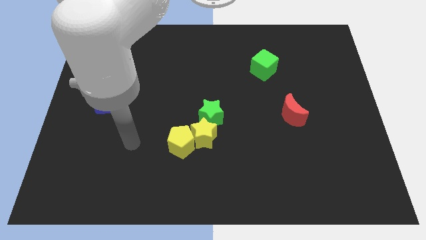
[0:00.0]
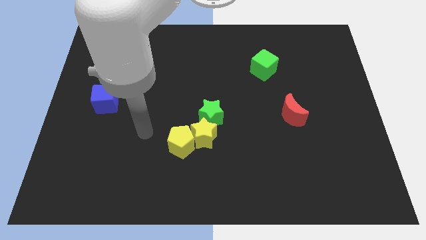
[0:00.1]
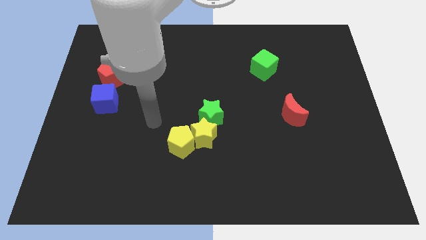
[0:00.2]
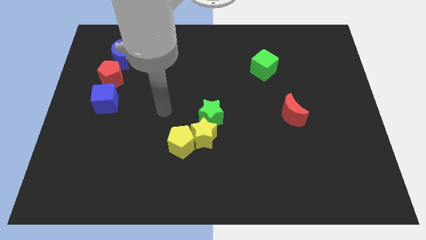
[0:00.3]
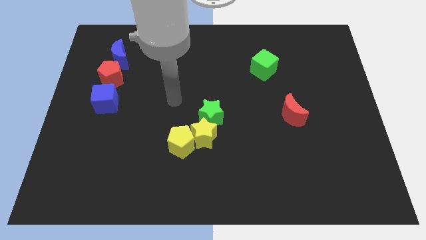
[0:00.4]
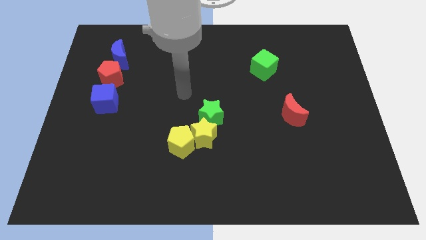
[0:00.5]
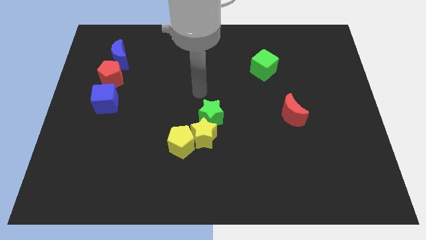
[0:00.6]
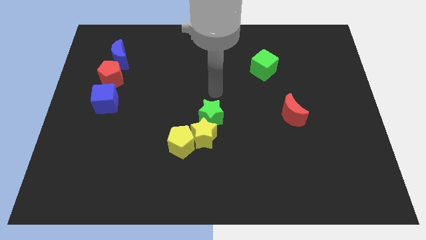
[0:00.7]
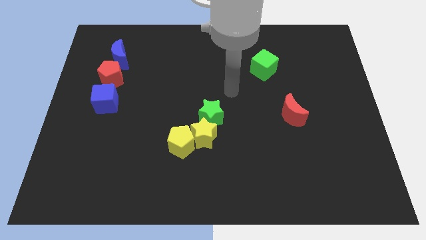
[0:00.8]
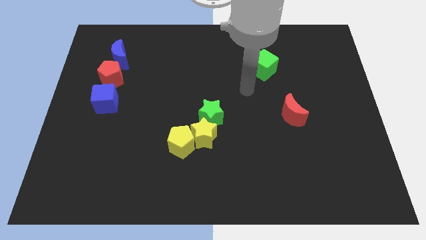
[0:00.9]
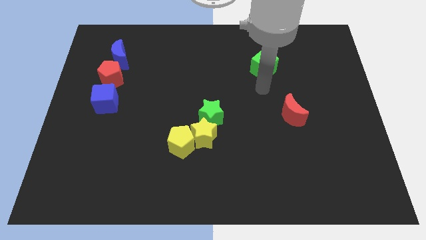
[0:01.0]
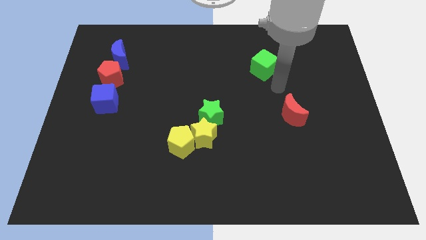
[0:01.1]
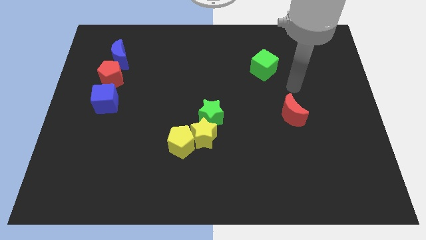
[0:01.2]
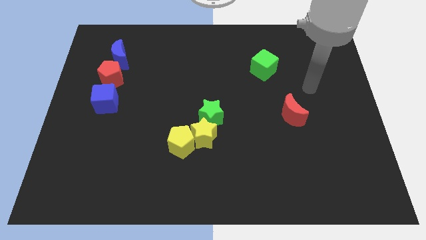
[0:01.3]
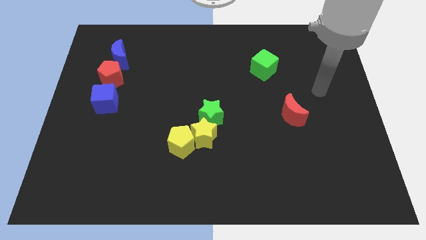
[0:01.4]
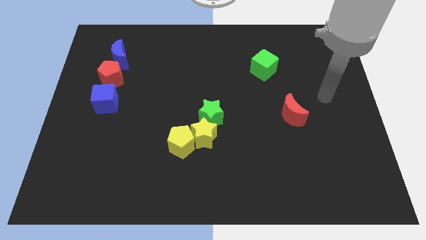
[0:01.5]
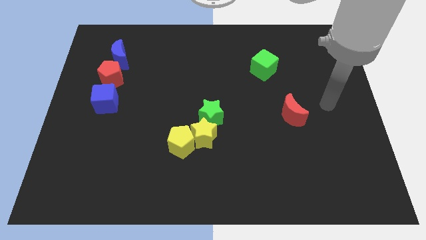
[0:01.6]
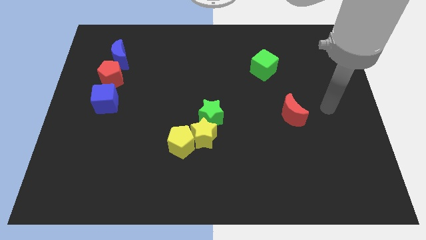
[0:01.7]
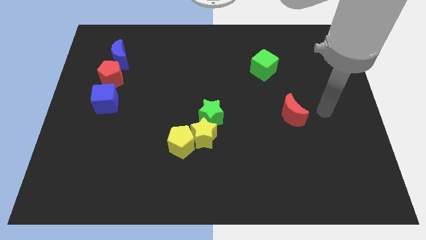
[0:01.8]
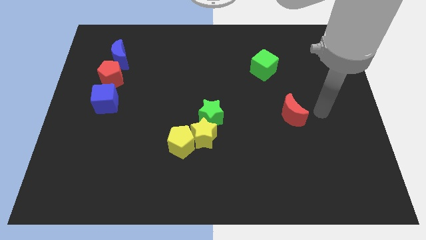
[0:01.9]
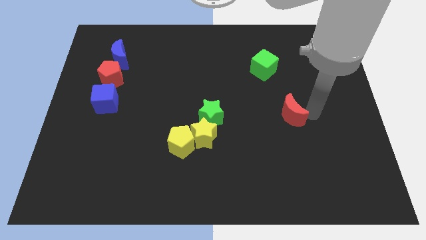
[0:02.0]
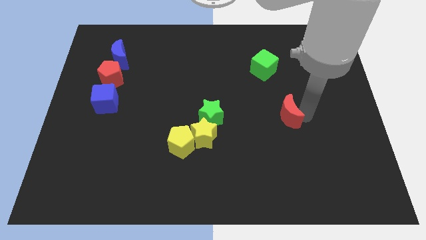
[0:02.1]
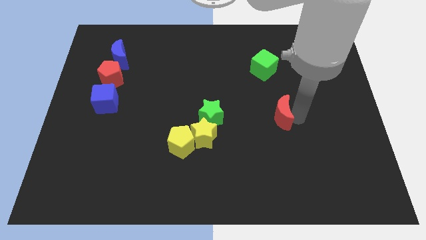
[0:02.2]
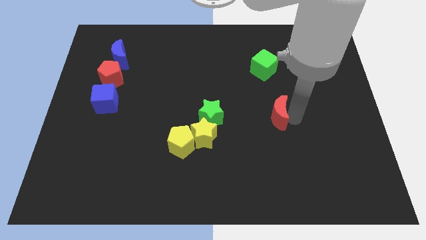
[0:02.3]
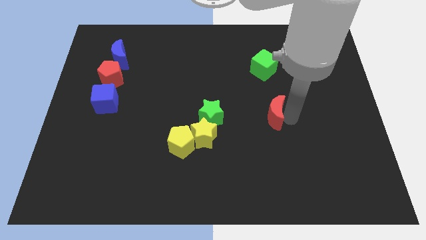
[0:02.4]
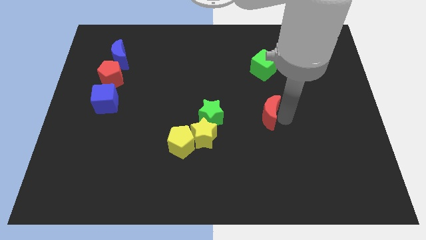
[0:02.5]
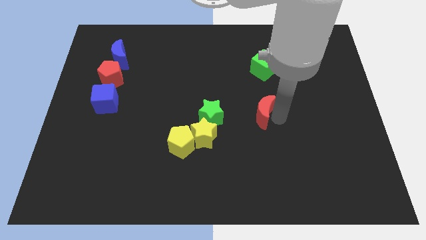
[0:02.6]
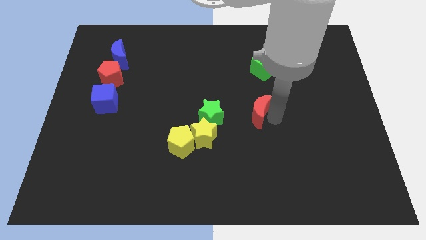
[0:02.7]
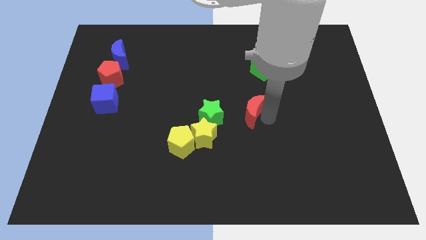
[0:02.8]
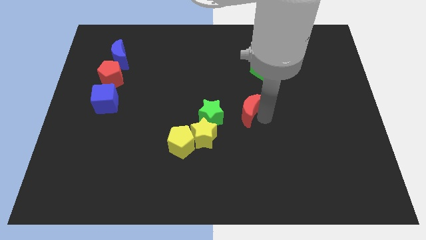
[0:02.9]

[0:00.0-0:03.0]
push red crescent below green cube

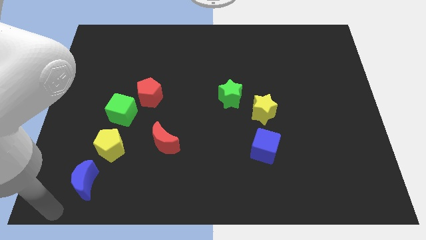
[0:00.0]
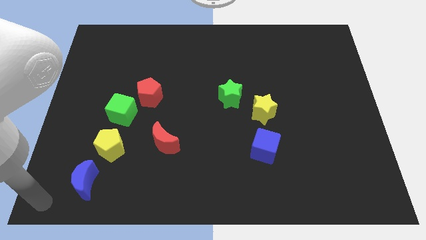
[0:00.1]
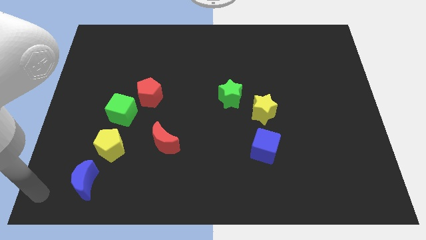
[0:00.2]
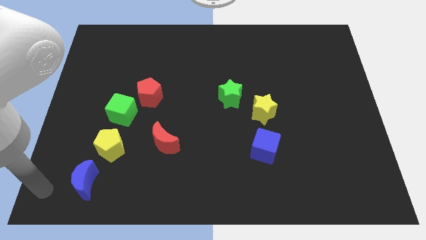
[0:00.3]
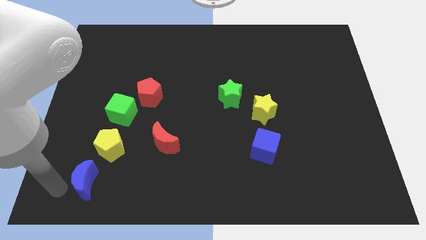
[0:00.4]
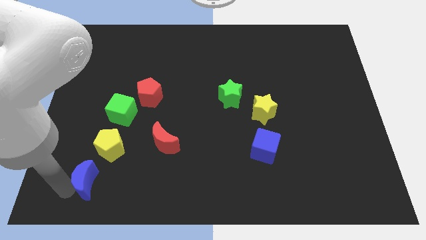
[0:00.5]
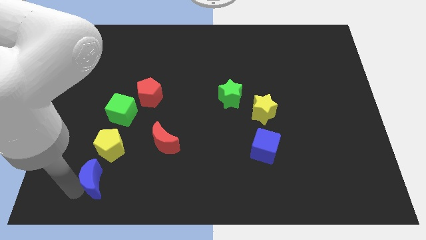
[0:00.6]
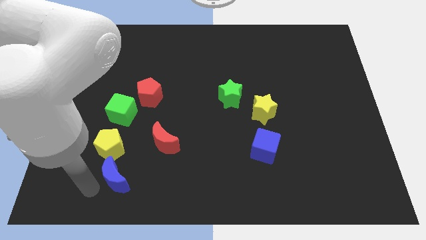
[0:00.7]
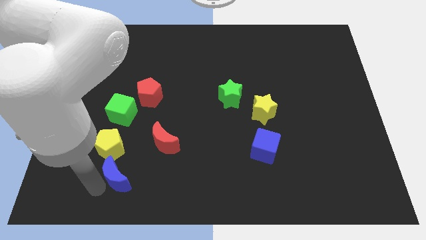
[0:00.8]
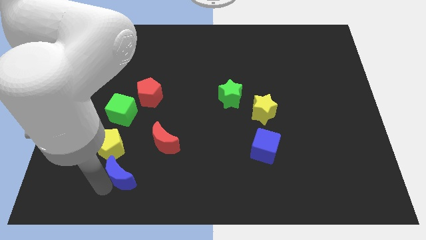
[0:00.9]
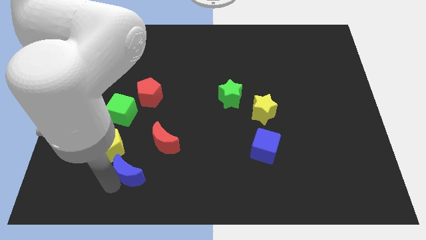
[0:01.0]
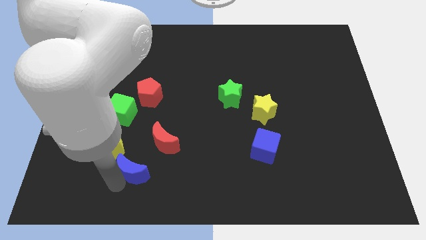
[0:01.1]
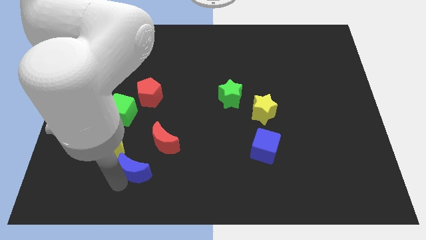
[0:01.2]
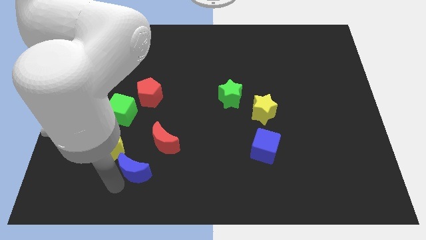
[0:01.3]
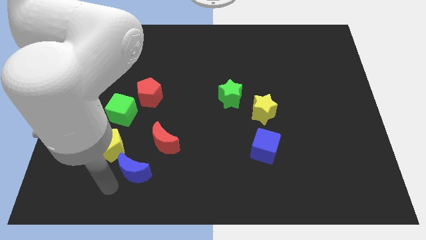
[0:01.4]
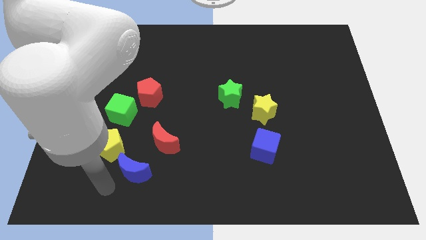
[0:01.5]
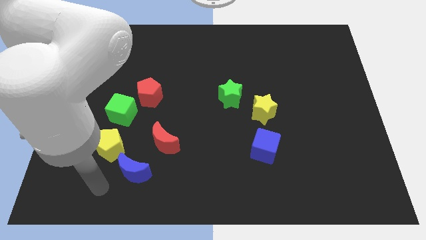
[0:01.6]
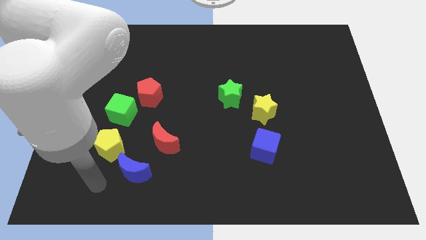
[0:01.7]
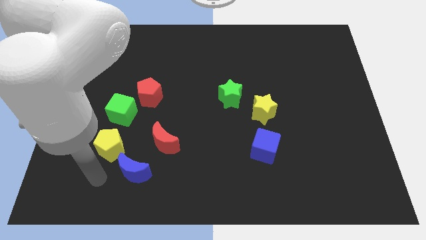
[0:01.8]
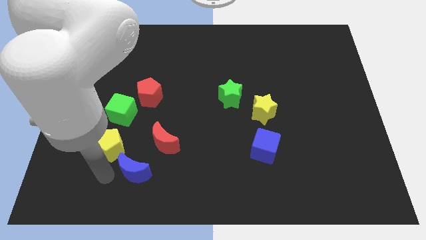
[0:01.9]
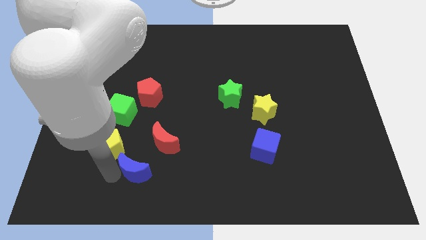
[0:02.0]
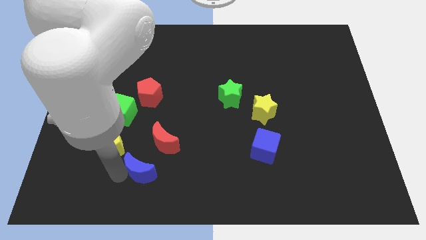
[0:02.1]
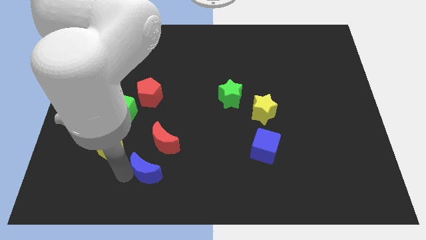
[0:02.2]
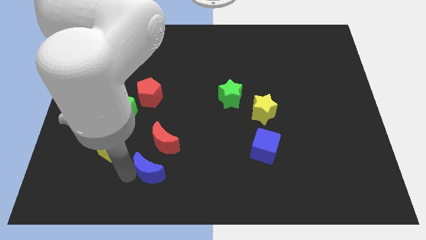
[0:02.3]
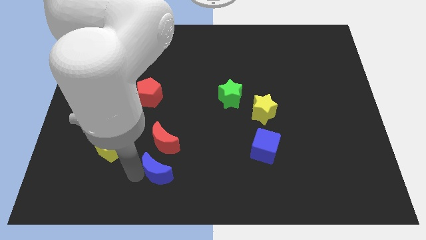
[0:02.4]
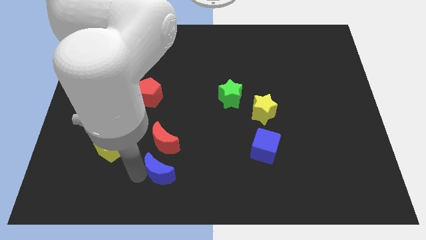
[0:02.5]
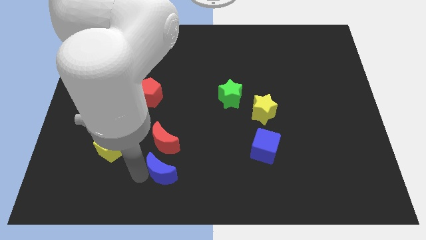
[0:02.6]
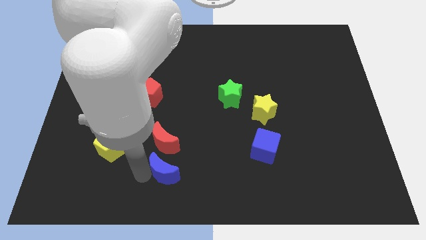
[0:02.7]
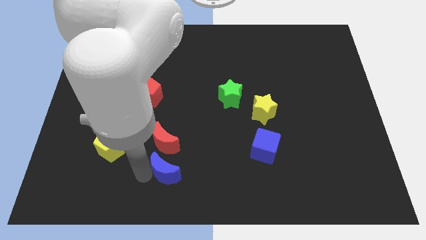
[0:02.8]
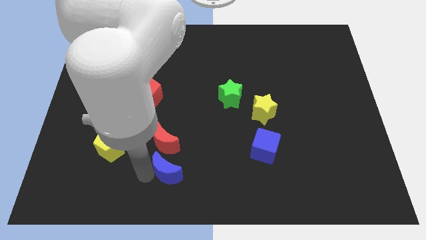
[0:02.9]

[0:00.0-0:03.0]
move blue crescent below red crescent

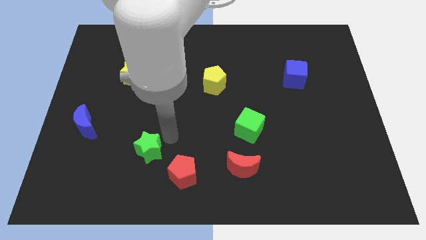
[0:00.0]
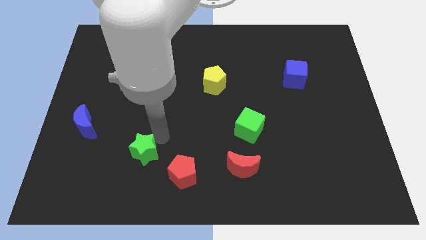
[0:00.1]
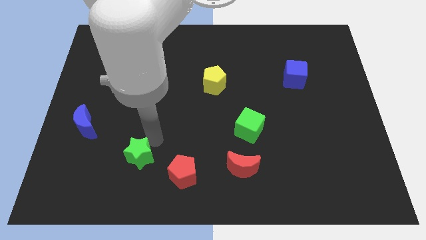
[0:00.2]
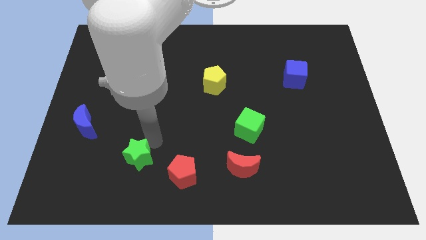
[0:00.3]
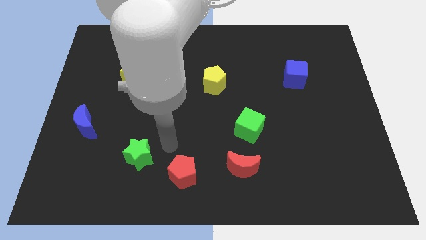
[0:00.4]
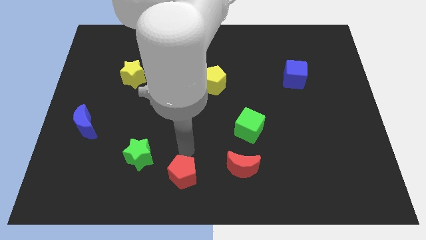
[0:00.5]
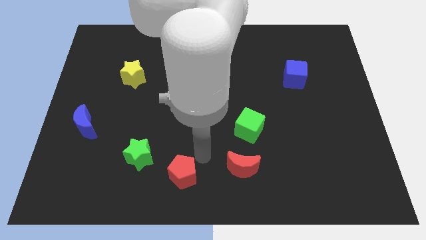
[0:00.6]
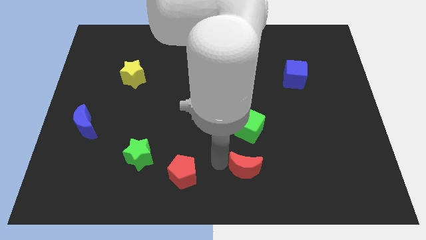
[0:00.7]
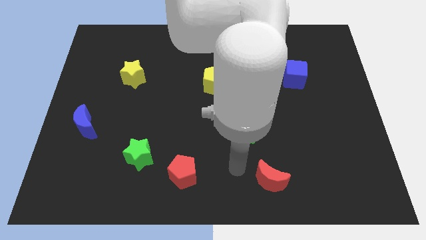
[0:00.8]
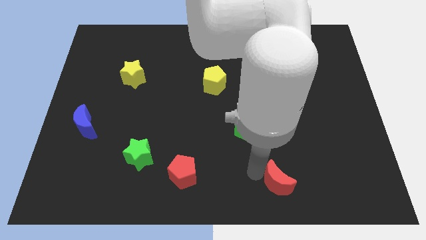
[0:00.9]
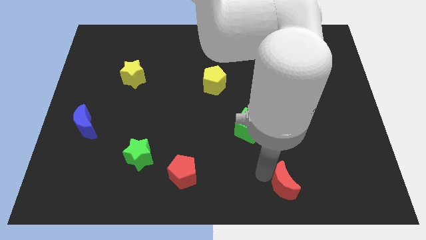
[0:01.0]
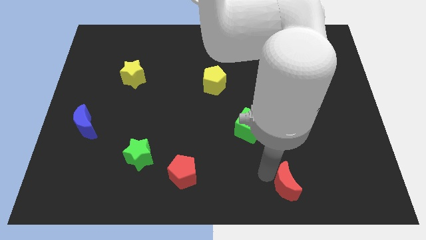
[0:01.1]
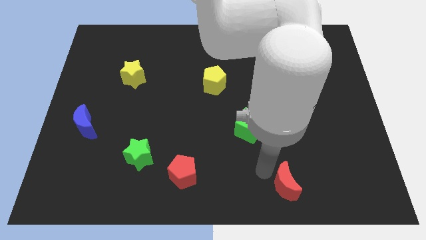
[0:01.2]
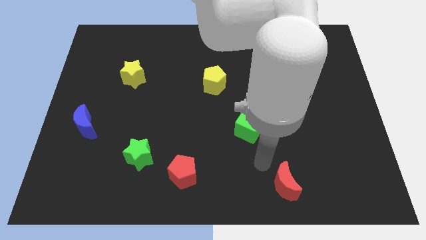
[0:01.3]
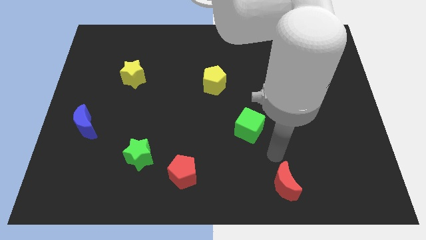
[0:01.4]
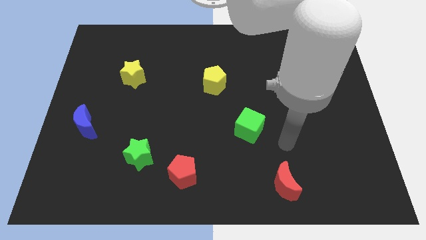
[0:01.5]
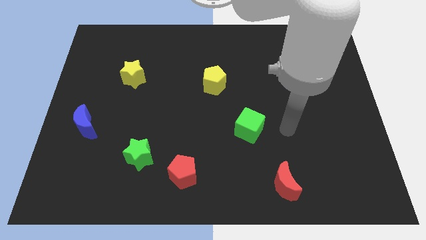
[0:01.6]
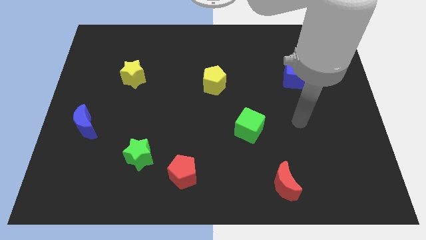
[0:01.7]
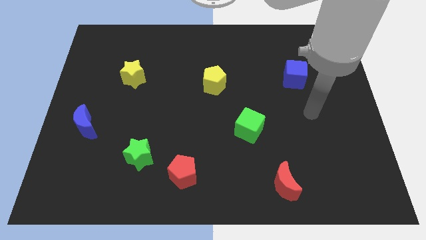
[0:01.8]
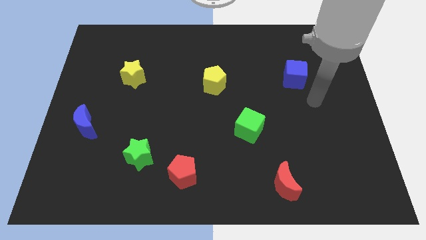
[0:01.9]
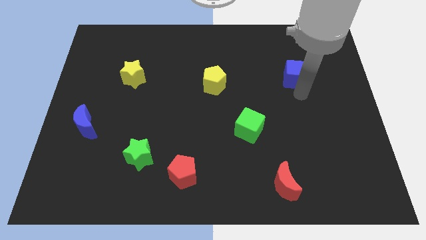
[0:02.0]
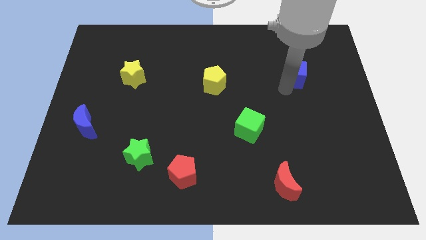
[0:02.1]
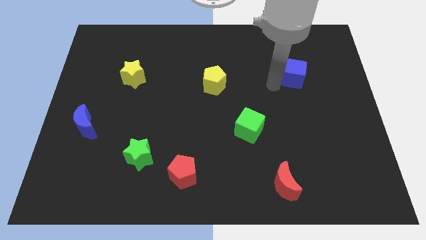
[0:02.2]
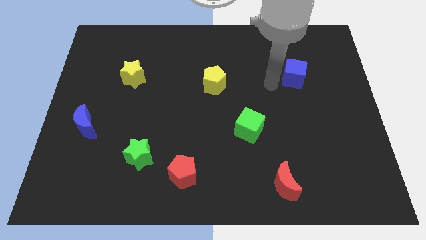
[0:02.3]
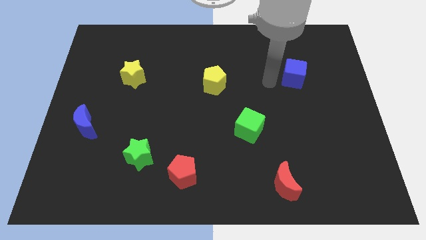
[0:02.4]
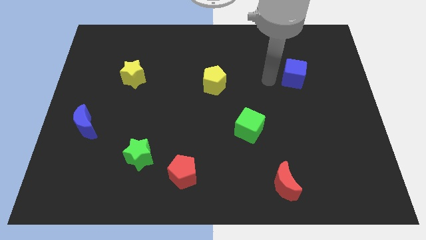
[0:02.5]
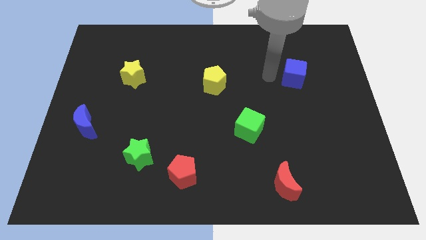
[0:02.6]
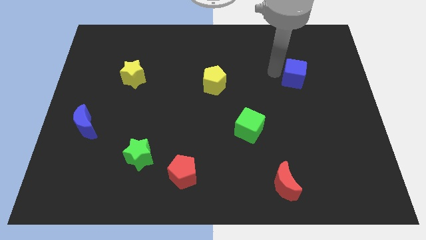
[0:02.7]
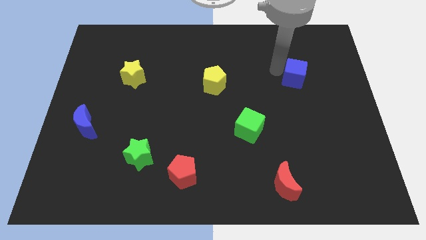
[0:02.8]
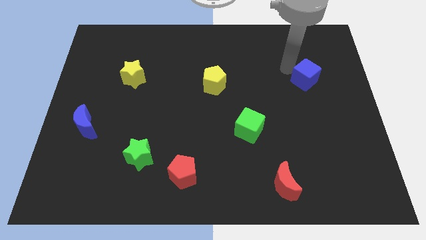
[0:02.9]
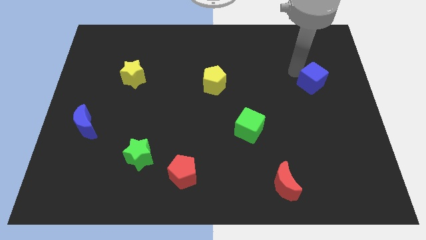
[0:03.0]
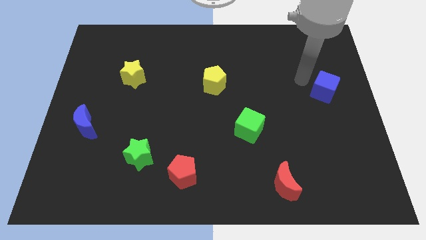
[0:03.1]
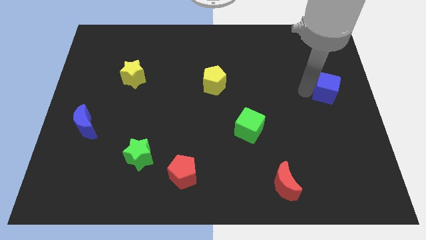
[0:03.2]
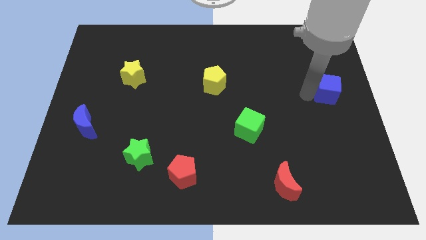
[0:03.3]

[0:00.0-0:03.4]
move the green star and the red moon away from the red pentagon
